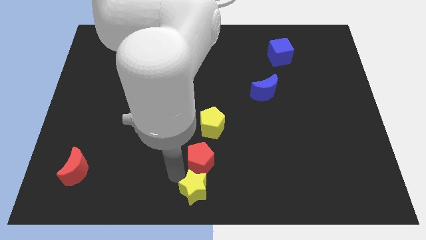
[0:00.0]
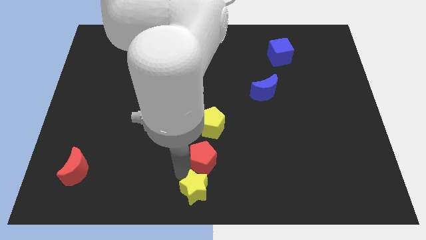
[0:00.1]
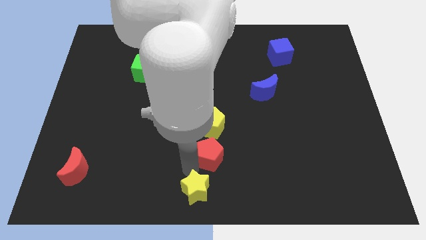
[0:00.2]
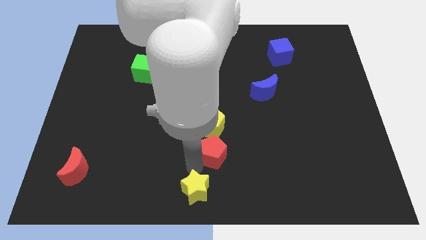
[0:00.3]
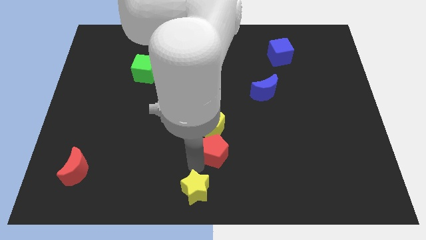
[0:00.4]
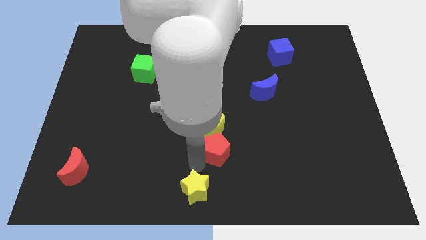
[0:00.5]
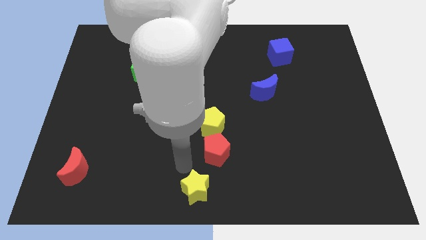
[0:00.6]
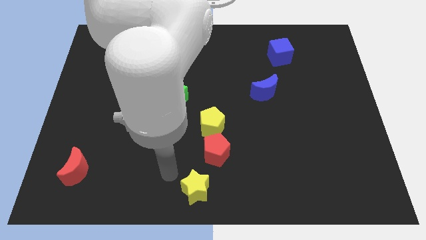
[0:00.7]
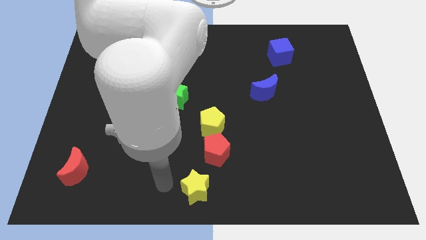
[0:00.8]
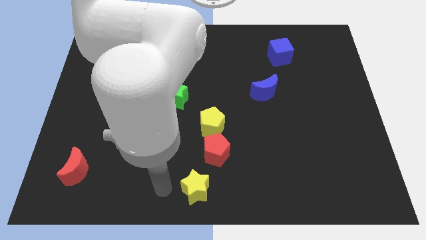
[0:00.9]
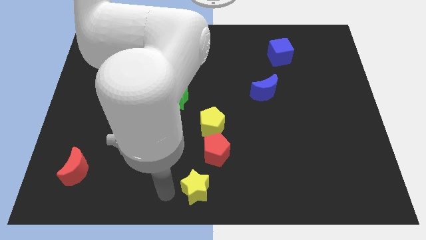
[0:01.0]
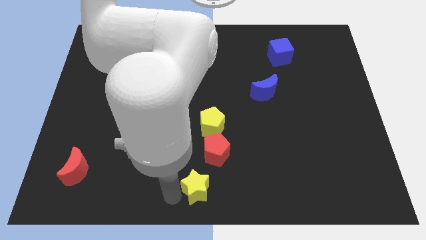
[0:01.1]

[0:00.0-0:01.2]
push the red pentagon into bottom of yellow pentagon

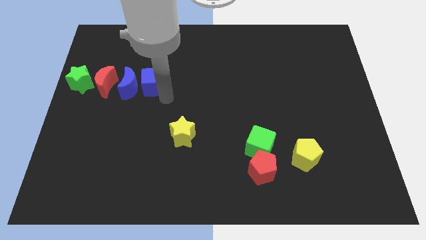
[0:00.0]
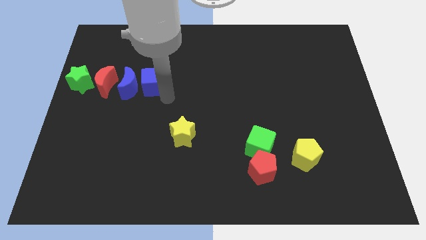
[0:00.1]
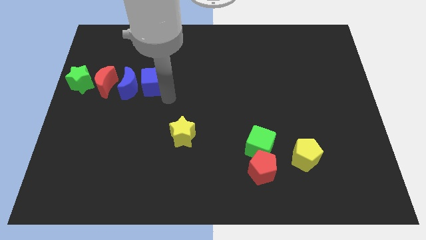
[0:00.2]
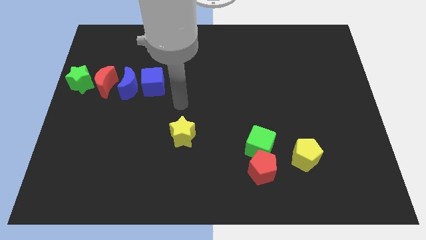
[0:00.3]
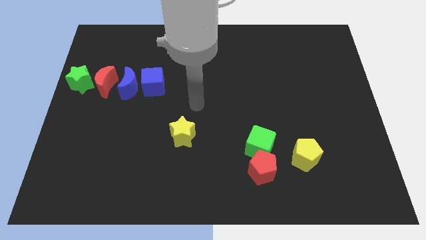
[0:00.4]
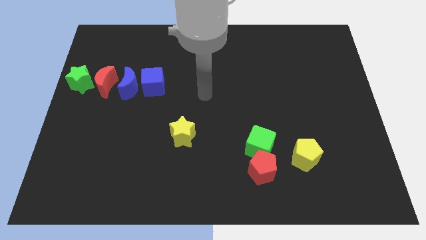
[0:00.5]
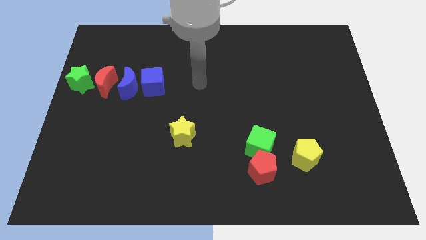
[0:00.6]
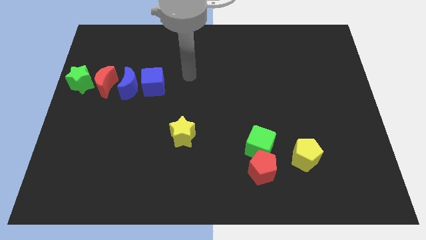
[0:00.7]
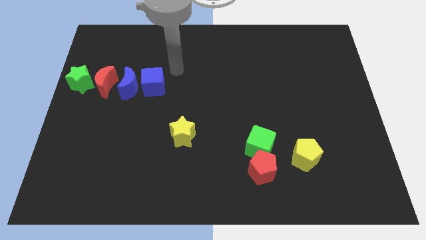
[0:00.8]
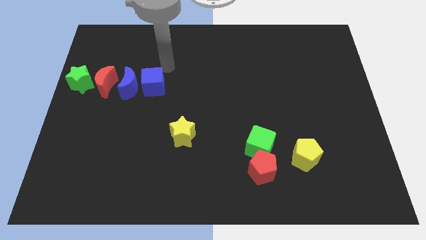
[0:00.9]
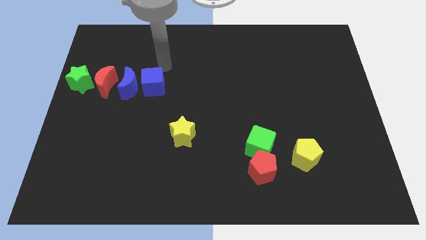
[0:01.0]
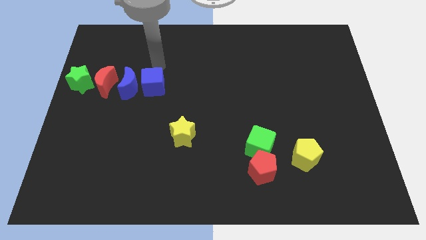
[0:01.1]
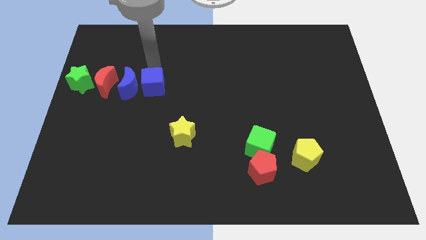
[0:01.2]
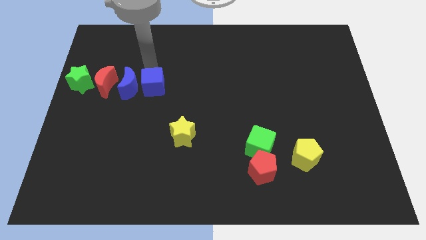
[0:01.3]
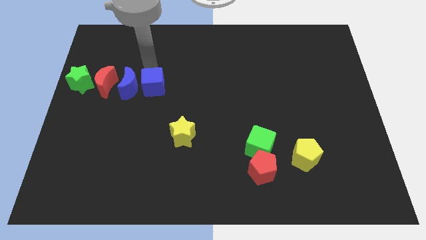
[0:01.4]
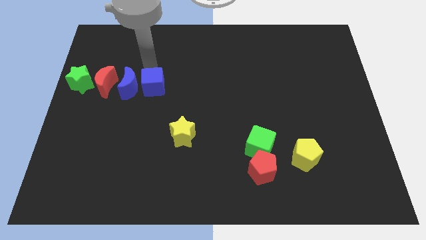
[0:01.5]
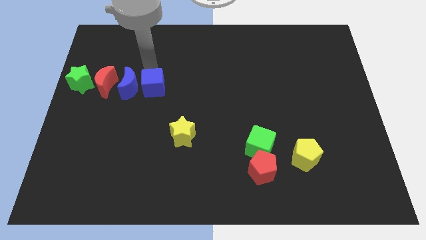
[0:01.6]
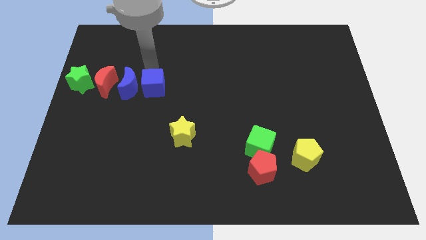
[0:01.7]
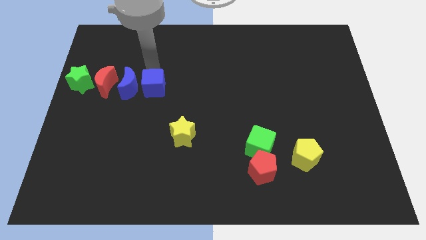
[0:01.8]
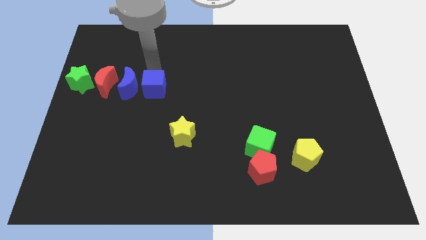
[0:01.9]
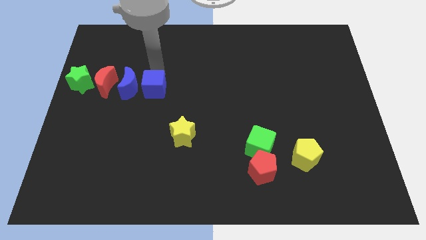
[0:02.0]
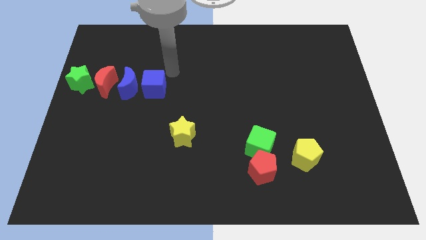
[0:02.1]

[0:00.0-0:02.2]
push blue cube slightly towards down

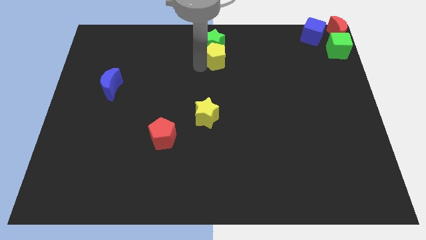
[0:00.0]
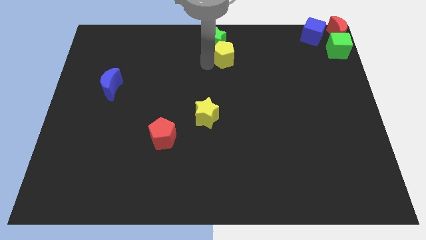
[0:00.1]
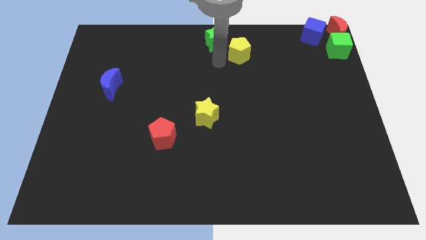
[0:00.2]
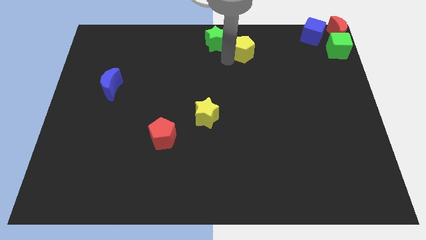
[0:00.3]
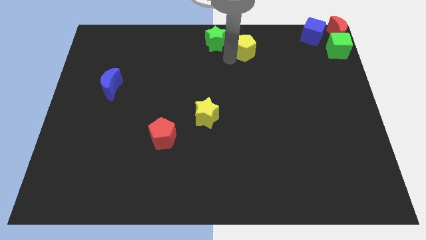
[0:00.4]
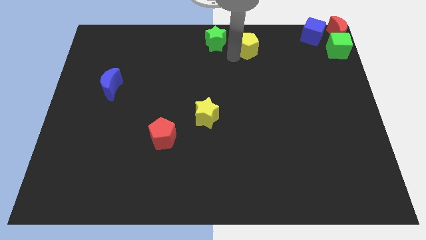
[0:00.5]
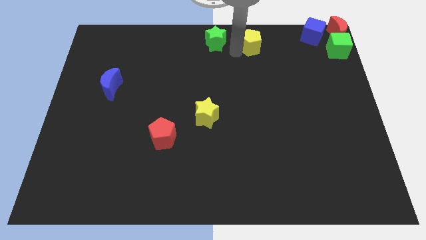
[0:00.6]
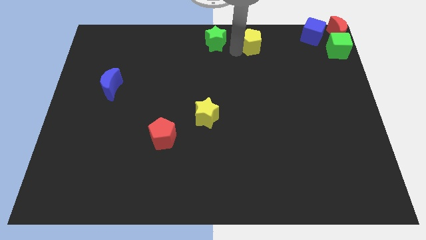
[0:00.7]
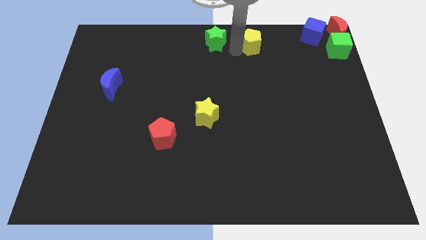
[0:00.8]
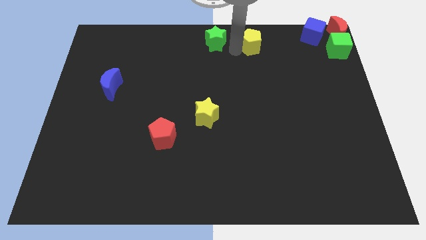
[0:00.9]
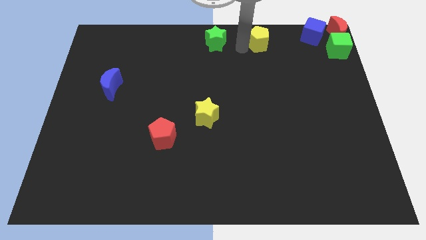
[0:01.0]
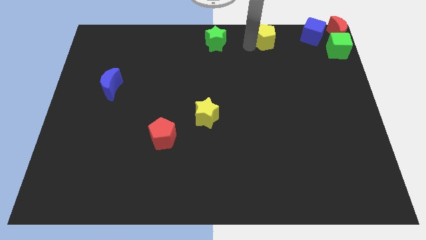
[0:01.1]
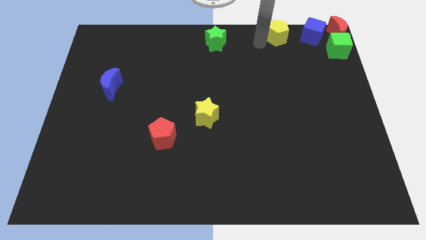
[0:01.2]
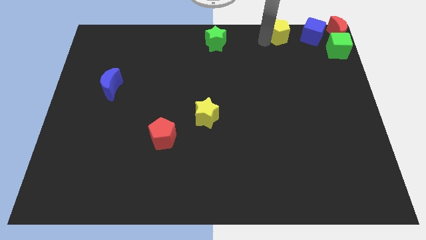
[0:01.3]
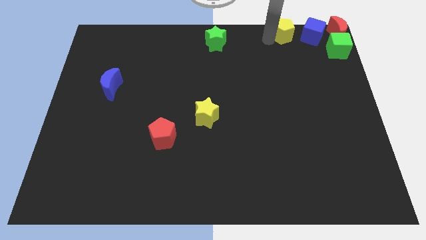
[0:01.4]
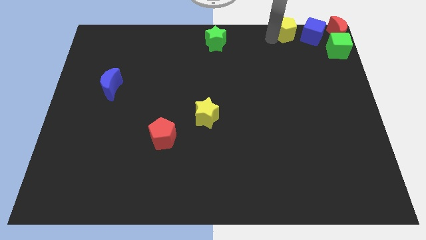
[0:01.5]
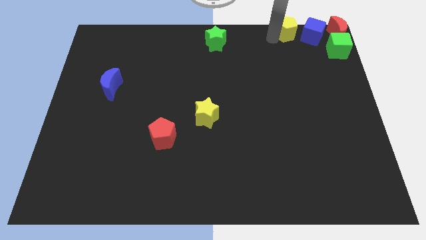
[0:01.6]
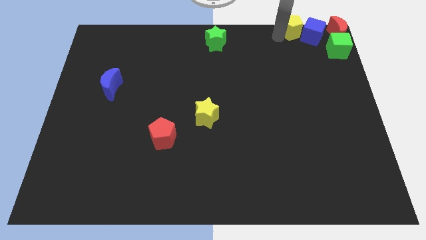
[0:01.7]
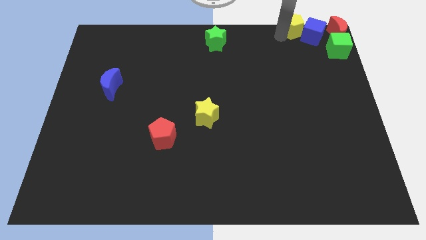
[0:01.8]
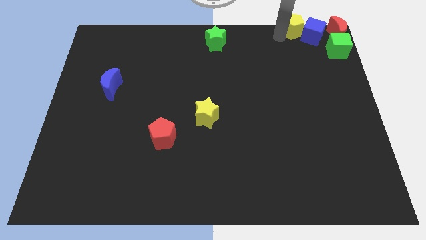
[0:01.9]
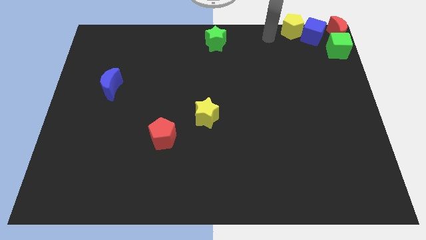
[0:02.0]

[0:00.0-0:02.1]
move yellow pentagon into the left of the blue cube

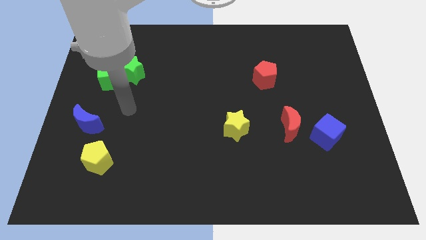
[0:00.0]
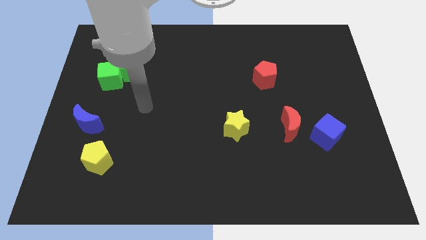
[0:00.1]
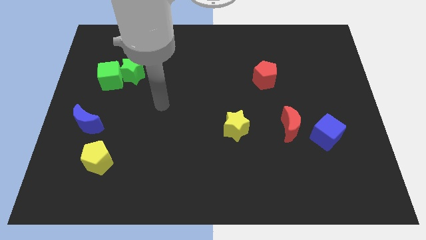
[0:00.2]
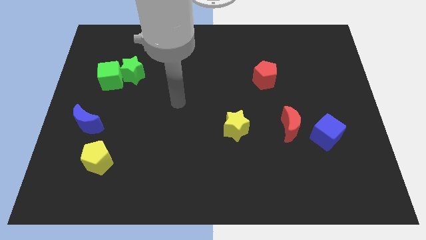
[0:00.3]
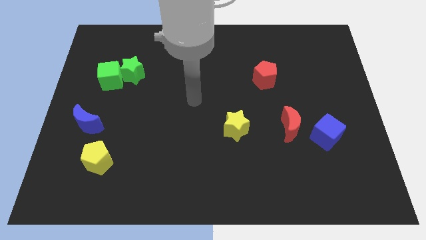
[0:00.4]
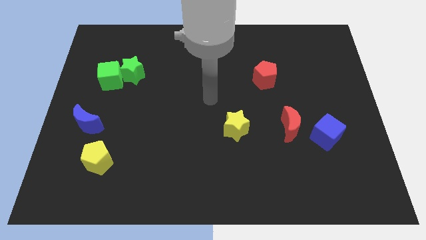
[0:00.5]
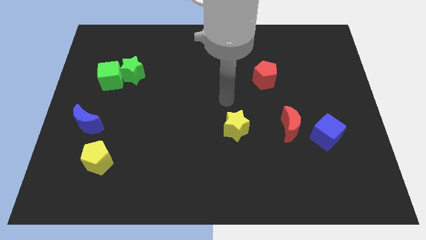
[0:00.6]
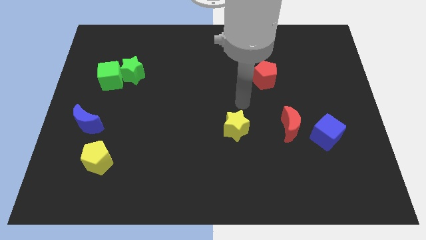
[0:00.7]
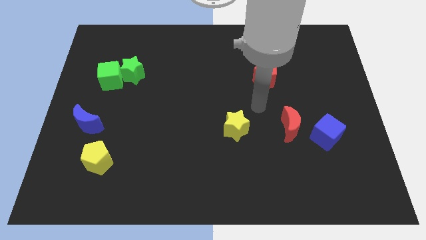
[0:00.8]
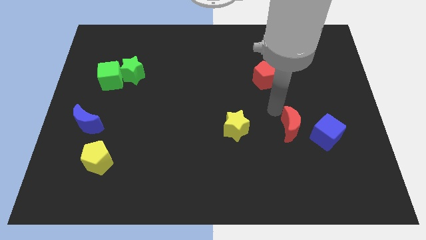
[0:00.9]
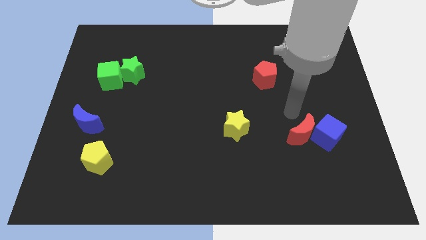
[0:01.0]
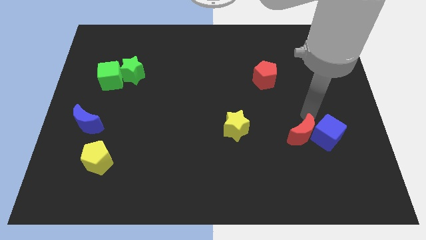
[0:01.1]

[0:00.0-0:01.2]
move the red crescent into the blue cube

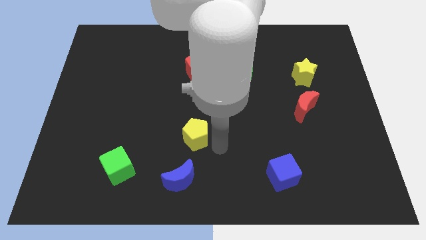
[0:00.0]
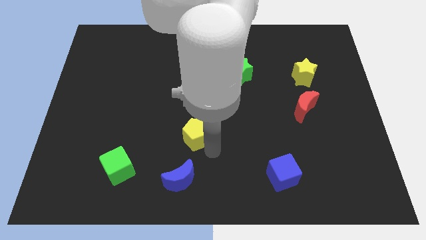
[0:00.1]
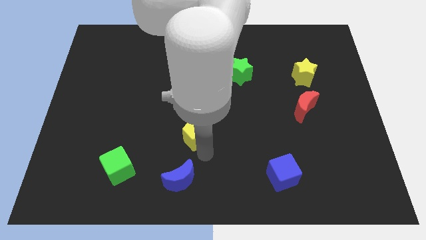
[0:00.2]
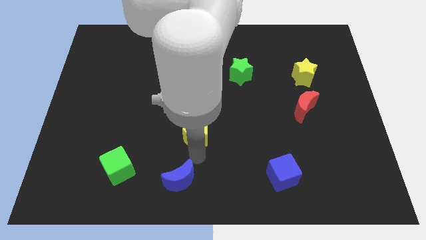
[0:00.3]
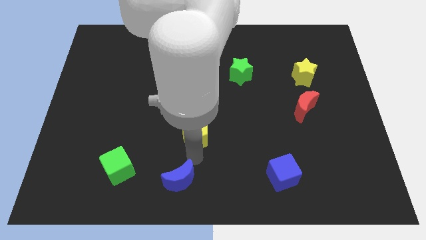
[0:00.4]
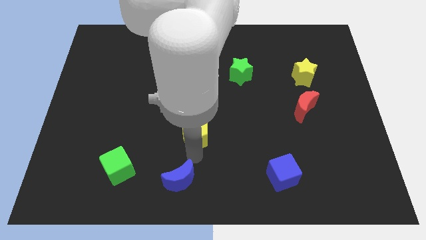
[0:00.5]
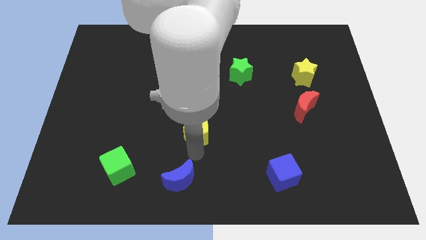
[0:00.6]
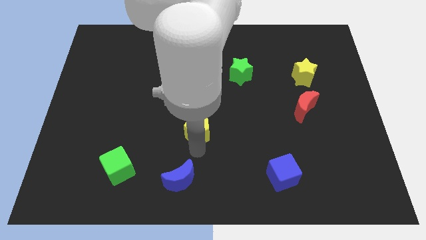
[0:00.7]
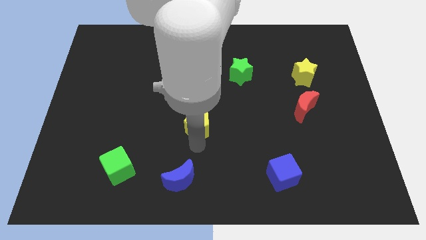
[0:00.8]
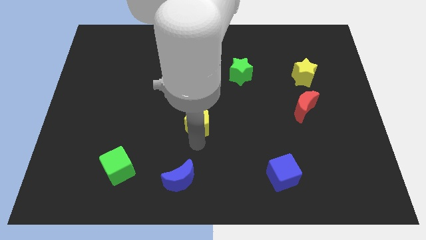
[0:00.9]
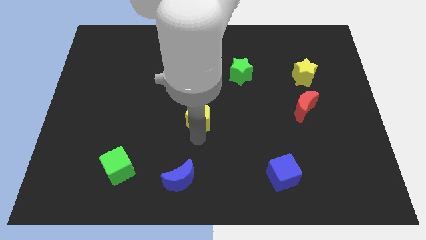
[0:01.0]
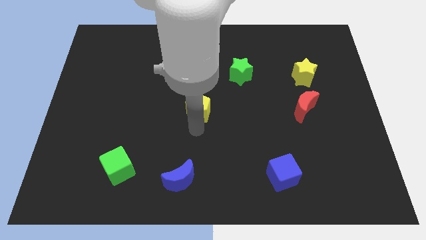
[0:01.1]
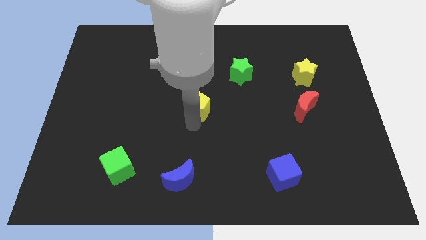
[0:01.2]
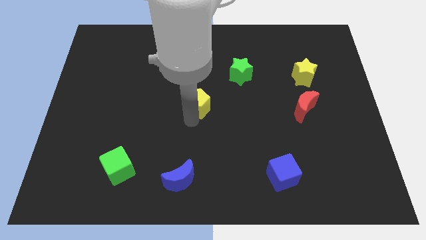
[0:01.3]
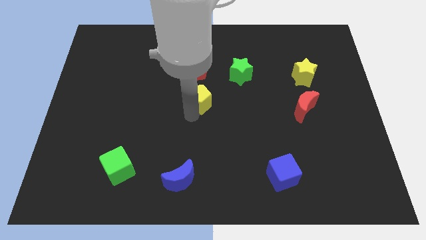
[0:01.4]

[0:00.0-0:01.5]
push the yellow pentagon to the center of the board

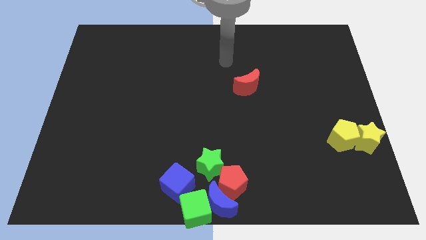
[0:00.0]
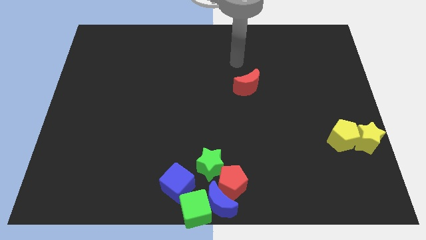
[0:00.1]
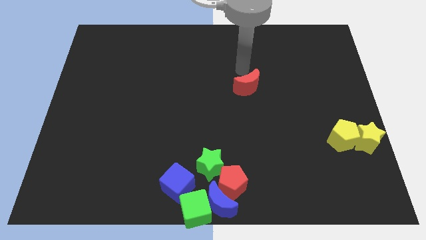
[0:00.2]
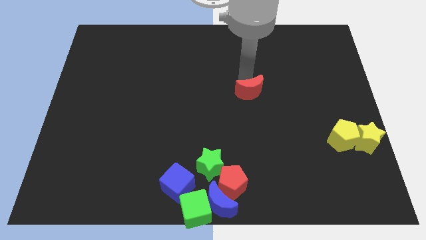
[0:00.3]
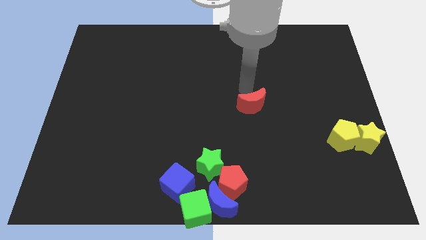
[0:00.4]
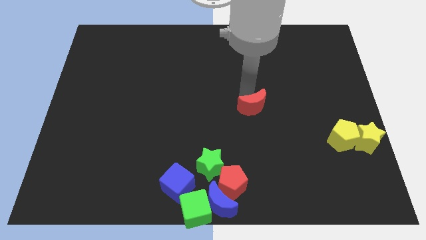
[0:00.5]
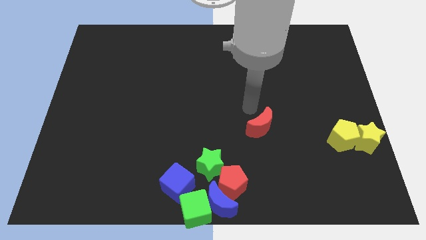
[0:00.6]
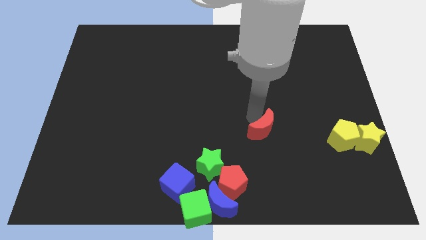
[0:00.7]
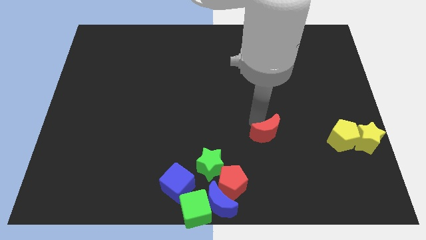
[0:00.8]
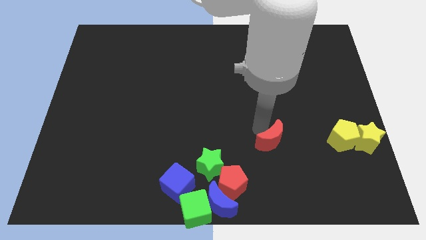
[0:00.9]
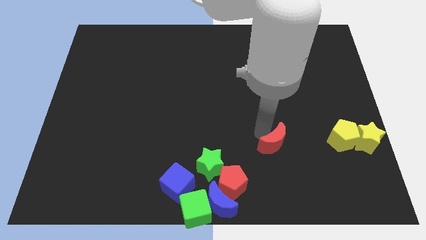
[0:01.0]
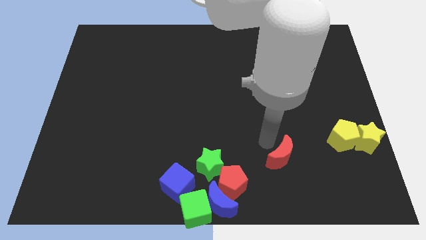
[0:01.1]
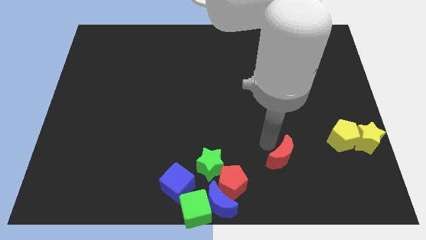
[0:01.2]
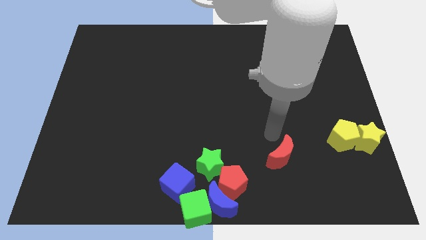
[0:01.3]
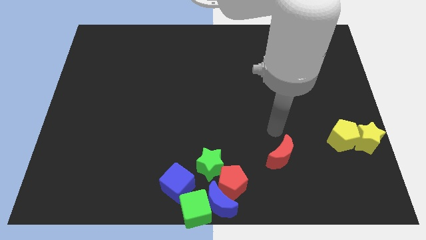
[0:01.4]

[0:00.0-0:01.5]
push the red moon in between the pentagons
